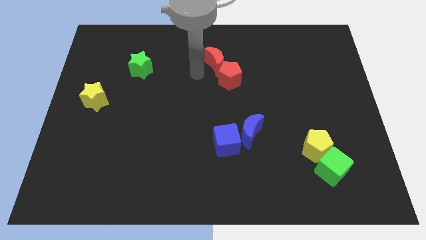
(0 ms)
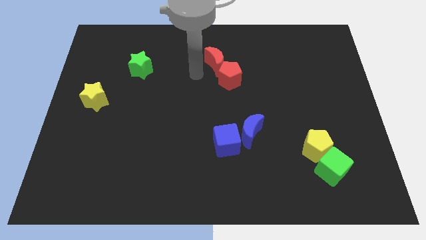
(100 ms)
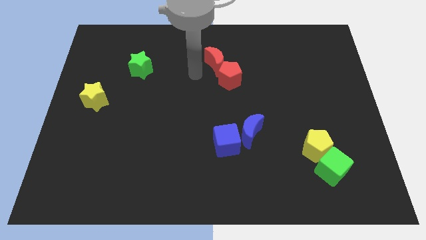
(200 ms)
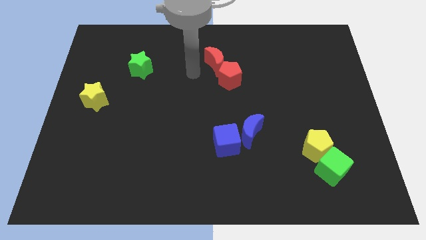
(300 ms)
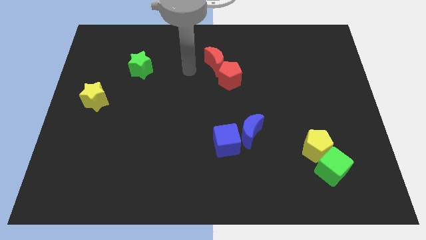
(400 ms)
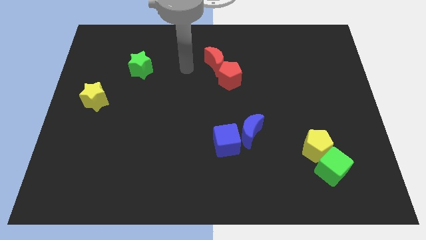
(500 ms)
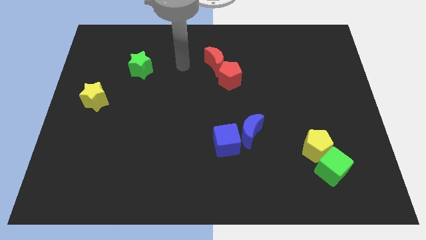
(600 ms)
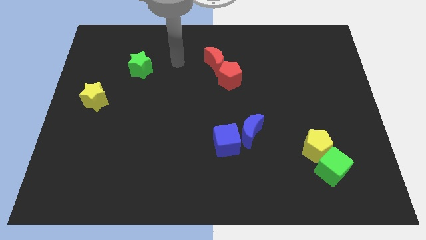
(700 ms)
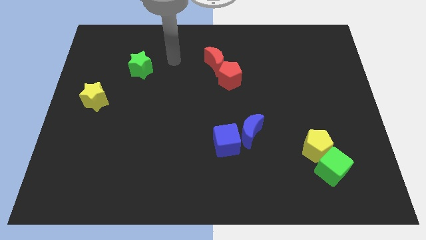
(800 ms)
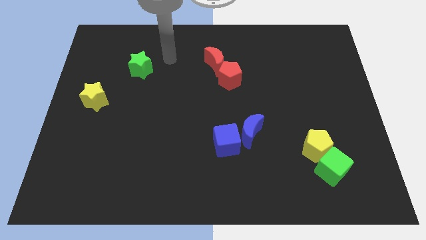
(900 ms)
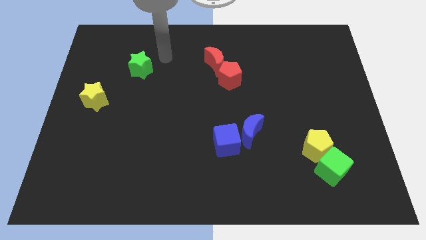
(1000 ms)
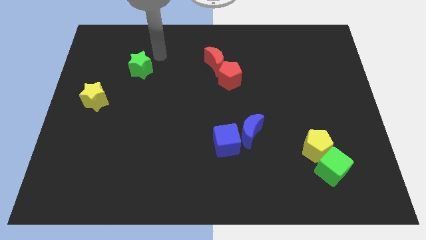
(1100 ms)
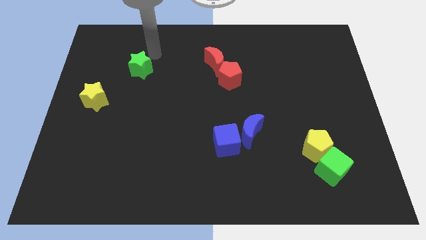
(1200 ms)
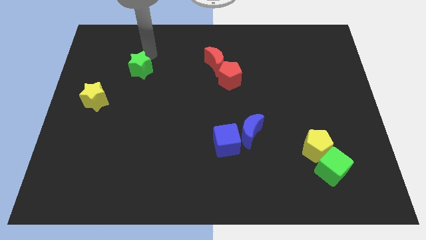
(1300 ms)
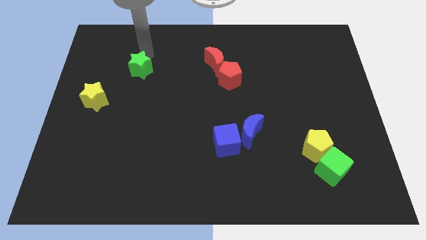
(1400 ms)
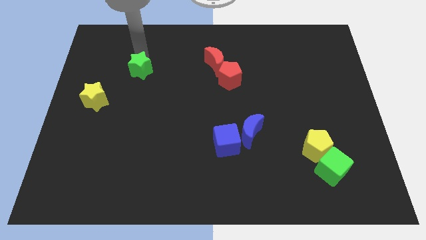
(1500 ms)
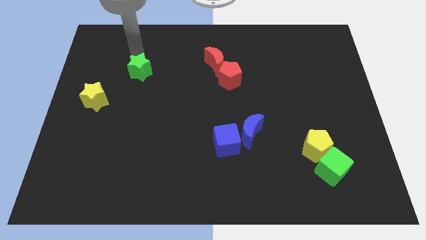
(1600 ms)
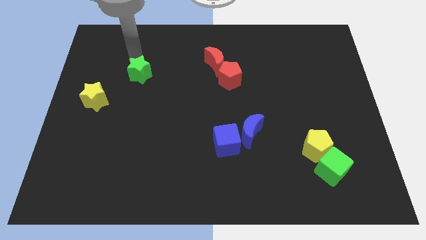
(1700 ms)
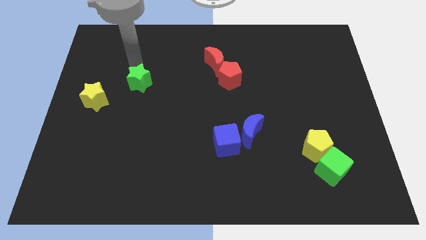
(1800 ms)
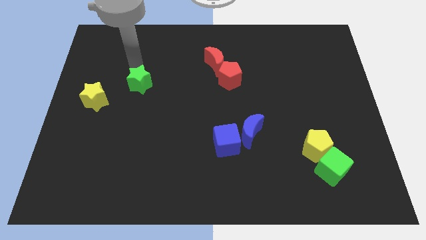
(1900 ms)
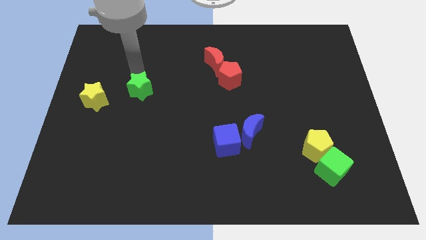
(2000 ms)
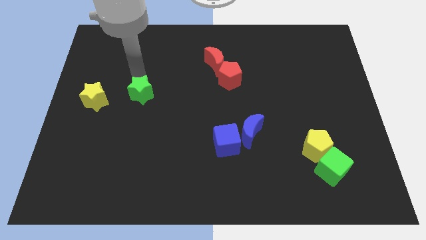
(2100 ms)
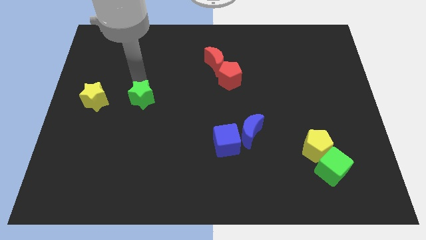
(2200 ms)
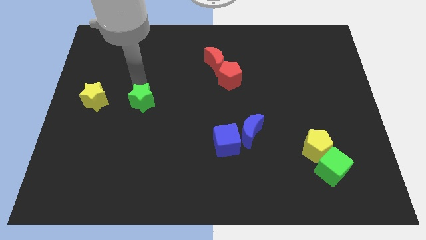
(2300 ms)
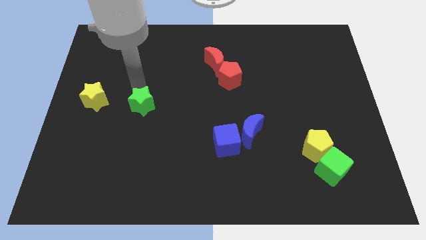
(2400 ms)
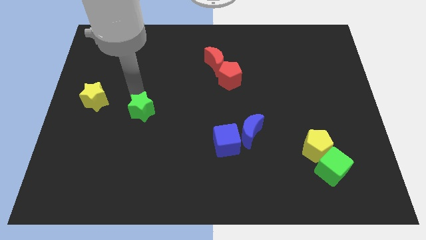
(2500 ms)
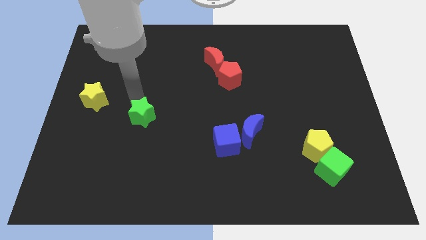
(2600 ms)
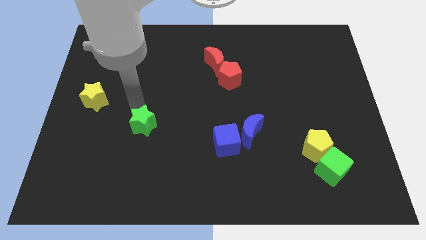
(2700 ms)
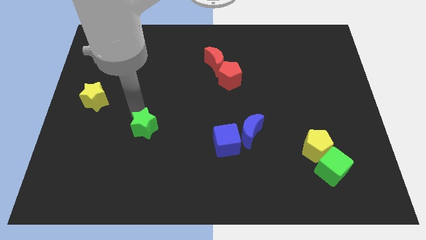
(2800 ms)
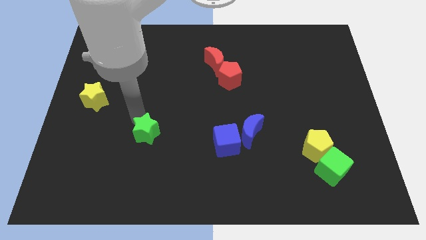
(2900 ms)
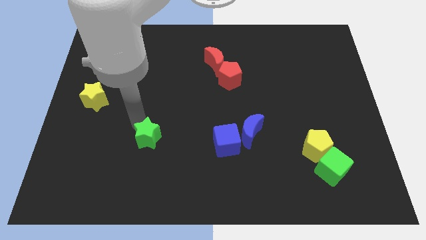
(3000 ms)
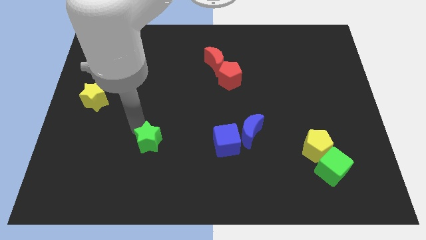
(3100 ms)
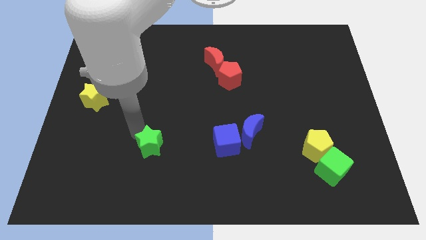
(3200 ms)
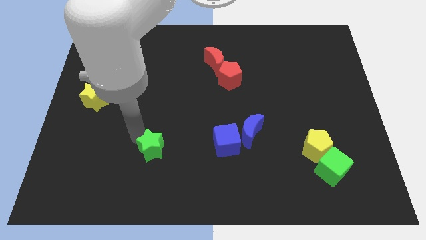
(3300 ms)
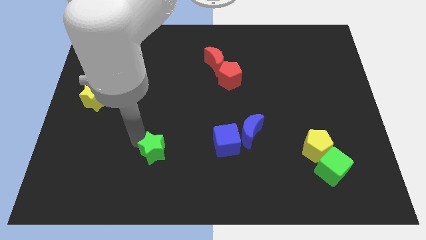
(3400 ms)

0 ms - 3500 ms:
push the green star left to the blue cube

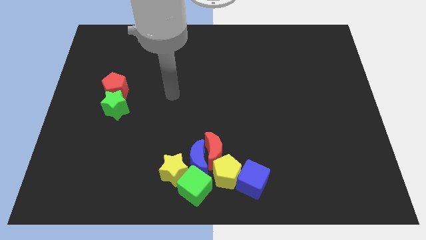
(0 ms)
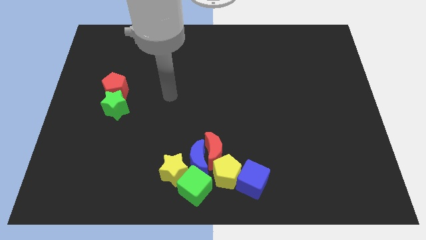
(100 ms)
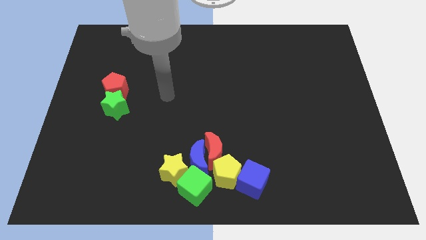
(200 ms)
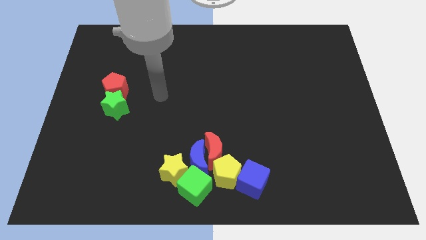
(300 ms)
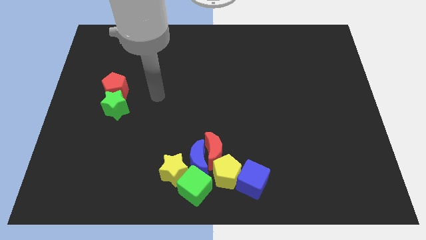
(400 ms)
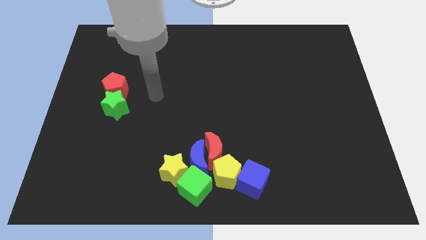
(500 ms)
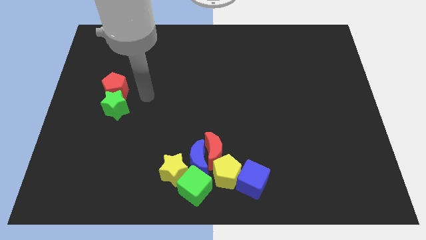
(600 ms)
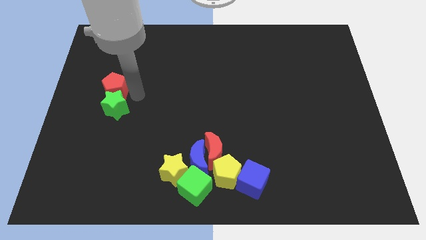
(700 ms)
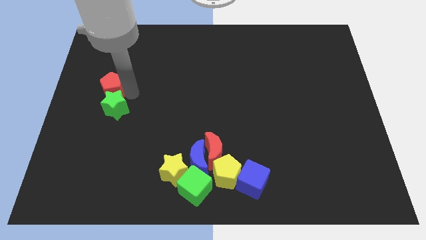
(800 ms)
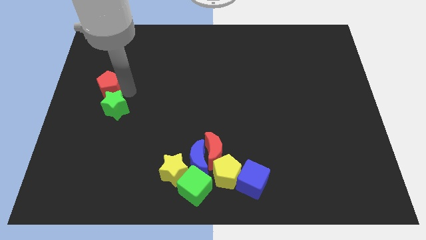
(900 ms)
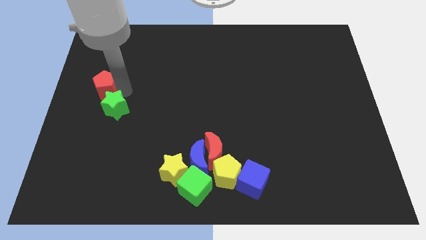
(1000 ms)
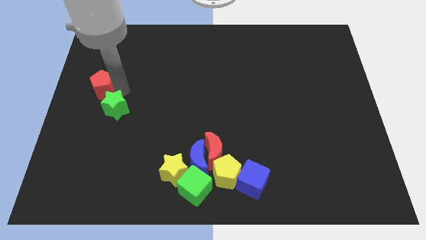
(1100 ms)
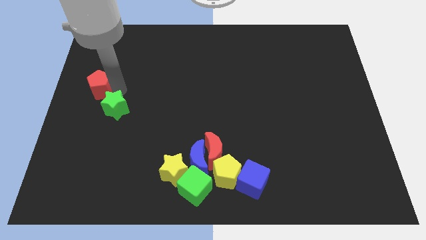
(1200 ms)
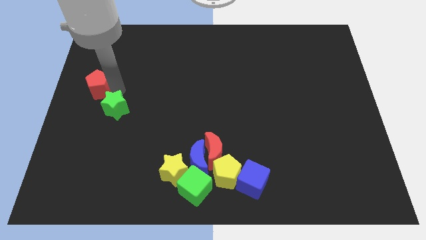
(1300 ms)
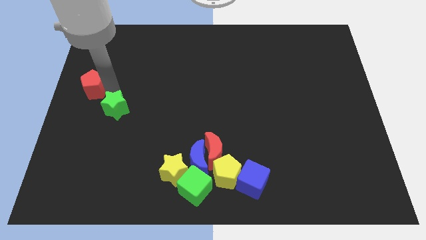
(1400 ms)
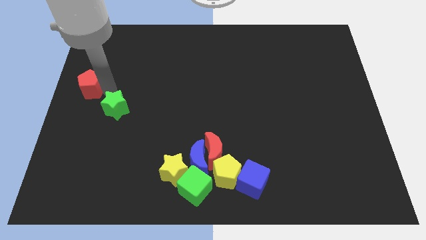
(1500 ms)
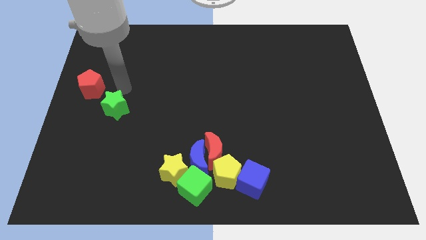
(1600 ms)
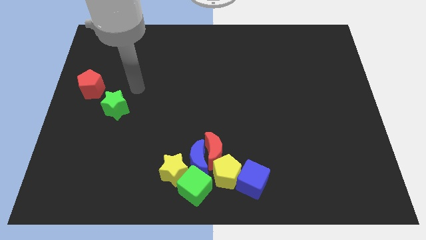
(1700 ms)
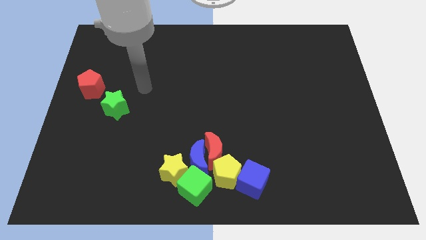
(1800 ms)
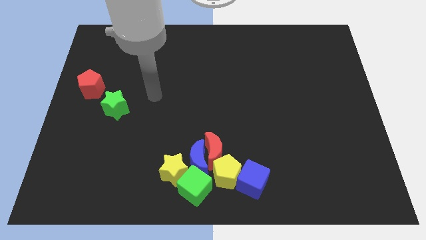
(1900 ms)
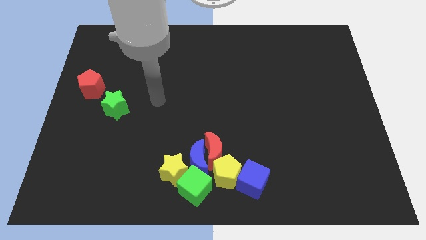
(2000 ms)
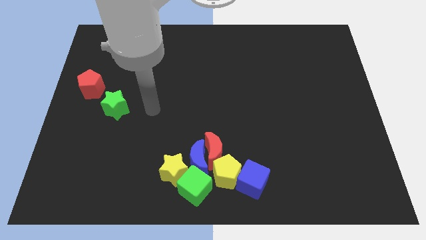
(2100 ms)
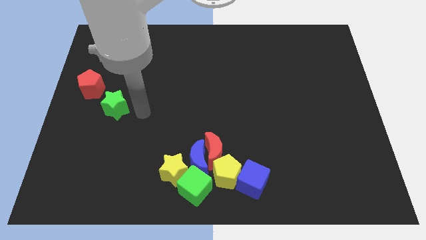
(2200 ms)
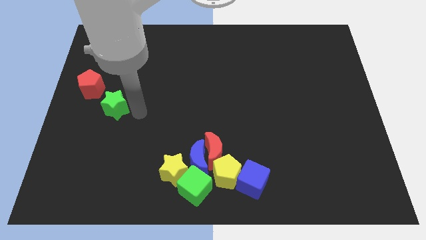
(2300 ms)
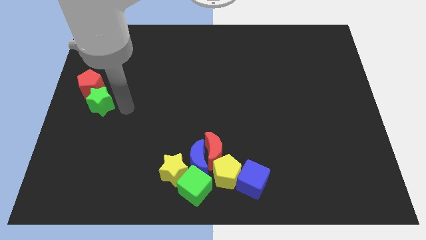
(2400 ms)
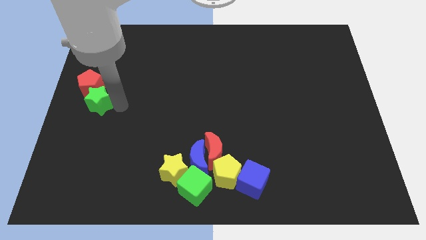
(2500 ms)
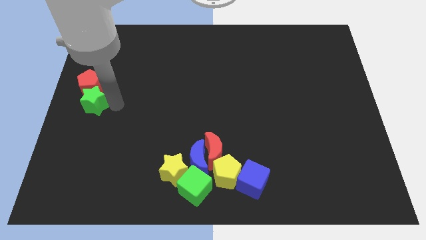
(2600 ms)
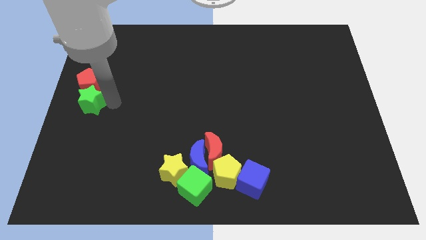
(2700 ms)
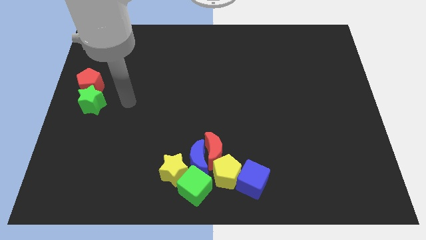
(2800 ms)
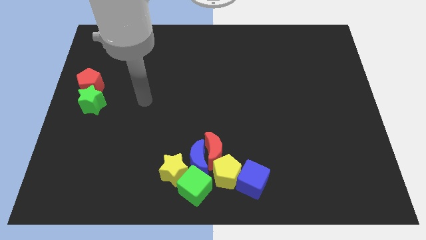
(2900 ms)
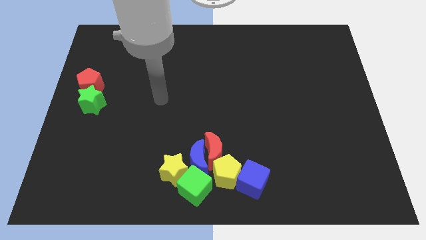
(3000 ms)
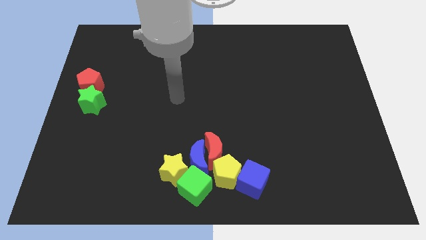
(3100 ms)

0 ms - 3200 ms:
move the red pentagon and green star towards the left

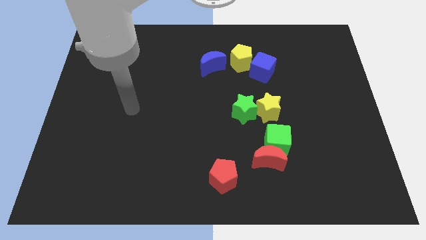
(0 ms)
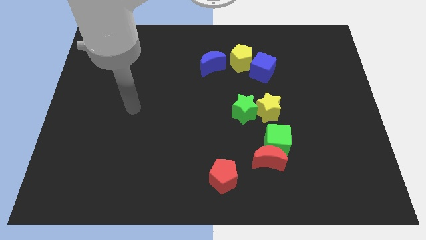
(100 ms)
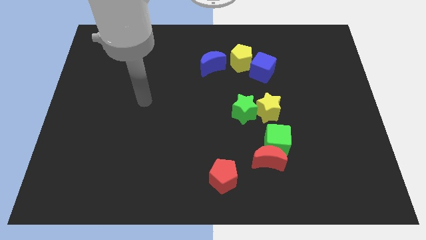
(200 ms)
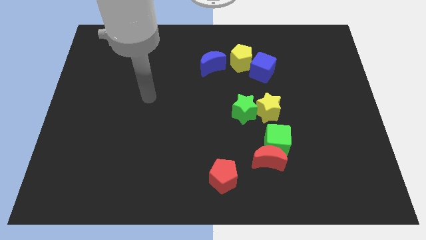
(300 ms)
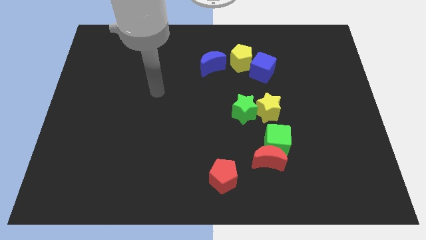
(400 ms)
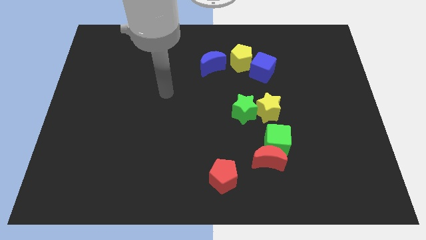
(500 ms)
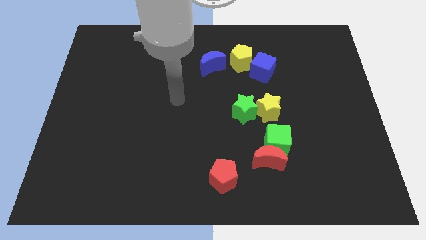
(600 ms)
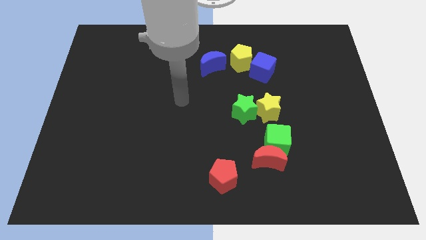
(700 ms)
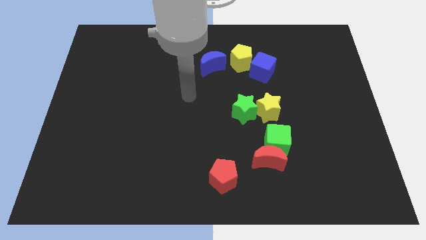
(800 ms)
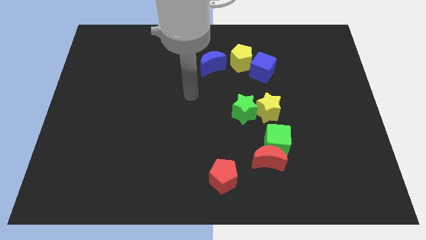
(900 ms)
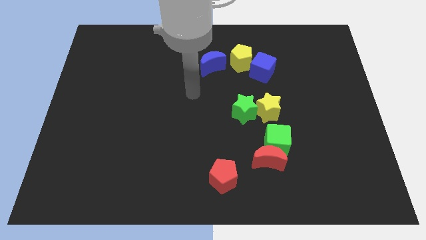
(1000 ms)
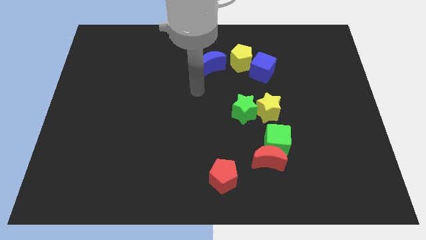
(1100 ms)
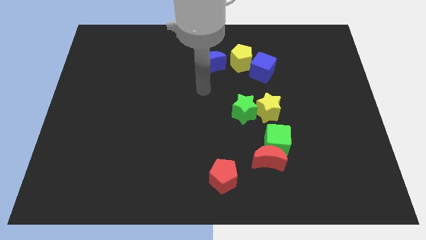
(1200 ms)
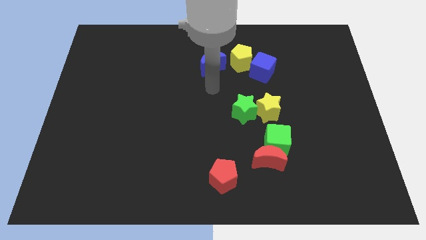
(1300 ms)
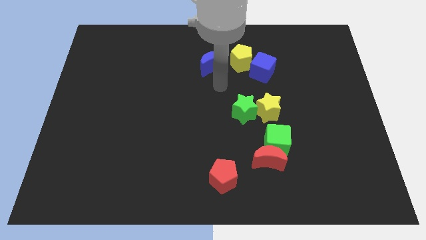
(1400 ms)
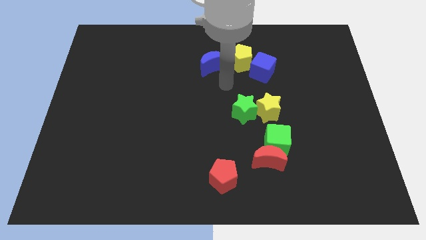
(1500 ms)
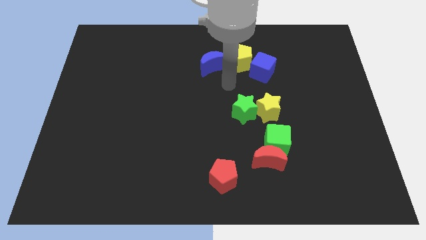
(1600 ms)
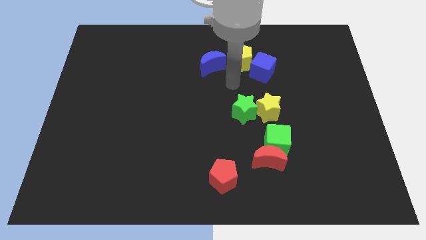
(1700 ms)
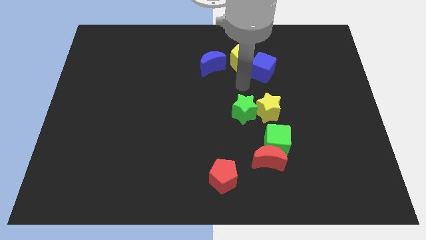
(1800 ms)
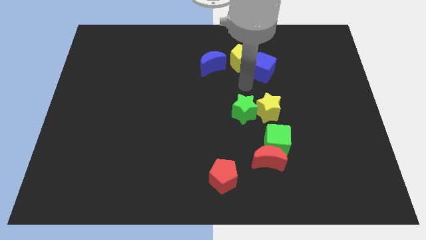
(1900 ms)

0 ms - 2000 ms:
point the arm below the yellow pentagon

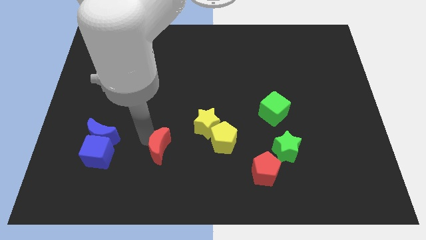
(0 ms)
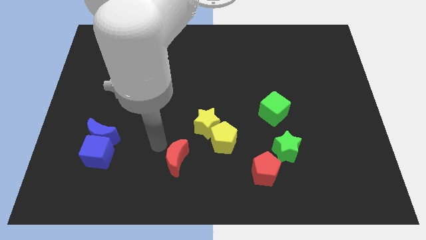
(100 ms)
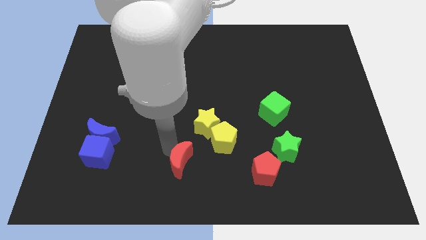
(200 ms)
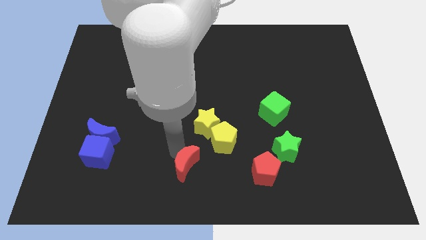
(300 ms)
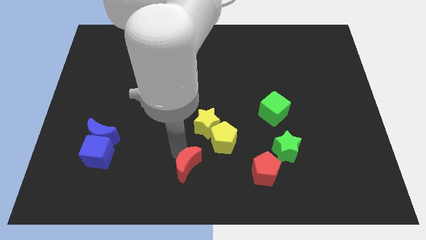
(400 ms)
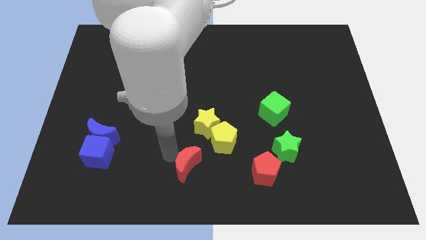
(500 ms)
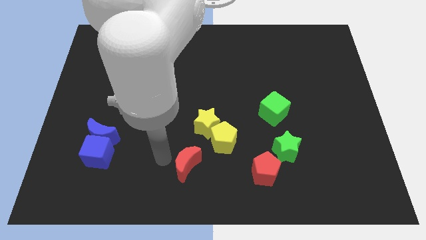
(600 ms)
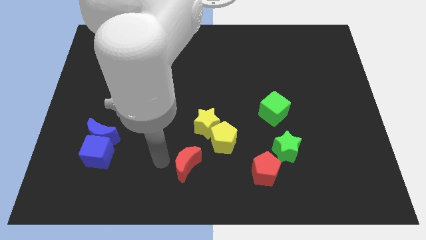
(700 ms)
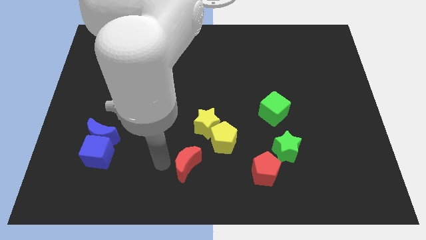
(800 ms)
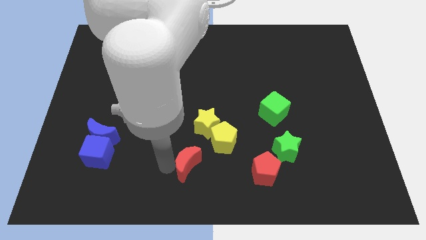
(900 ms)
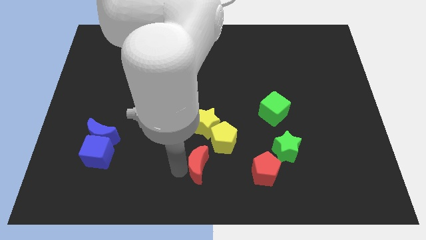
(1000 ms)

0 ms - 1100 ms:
push the red crescent towards the red pentagon
